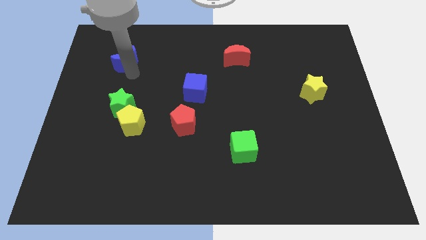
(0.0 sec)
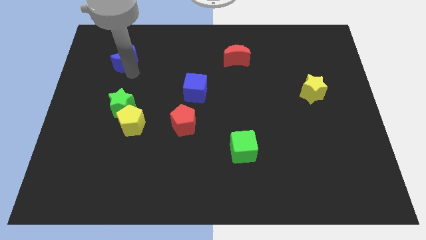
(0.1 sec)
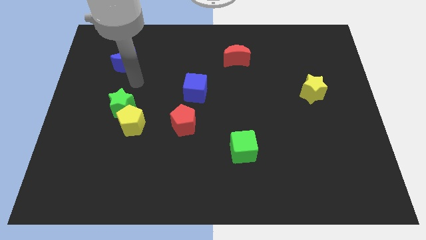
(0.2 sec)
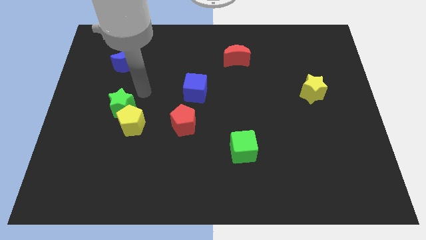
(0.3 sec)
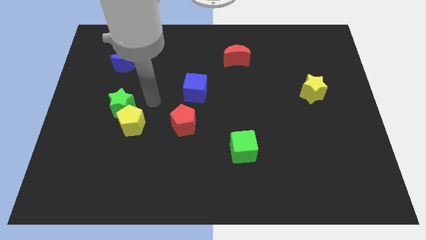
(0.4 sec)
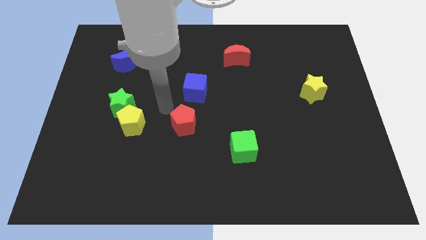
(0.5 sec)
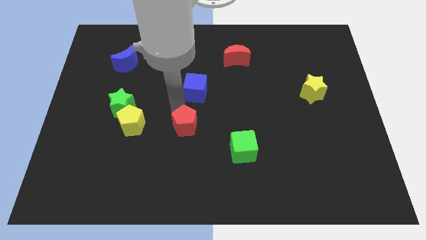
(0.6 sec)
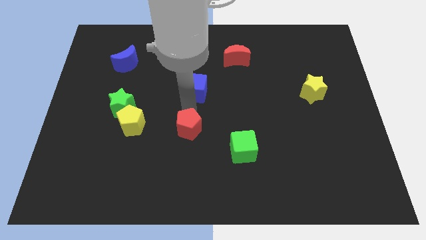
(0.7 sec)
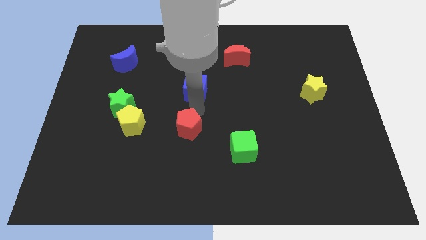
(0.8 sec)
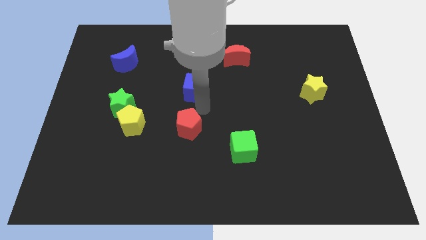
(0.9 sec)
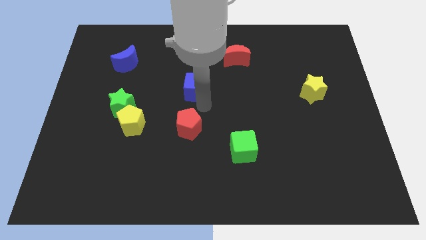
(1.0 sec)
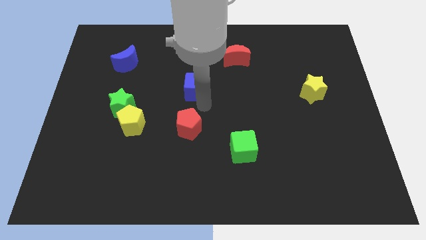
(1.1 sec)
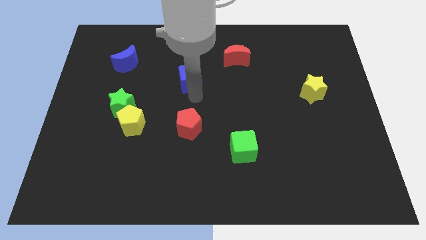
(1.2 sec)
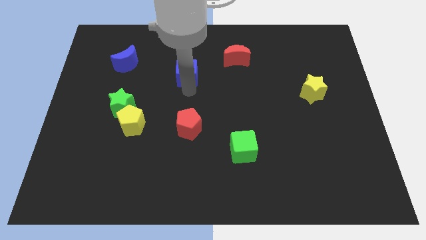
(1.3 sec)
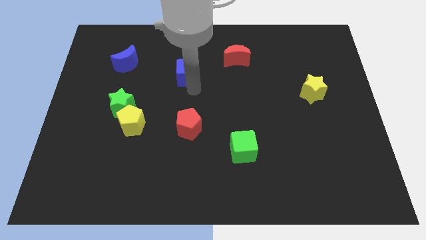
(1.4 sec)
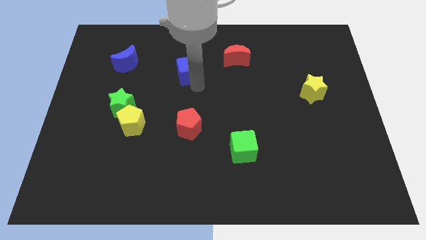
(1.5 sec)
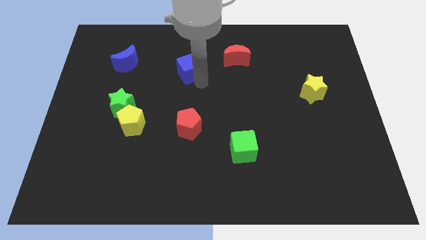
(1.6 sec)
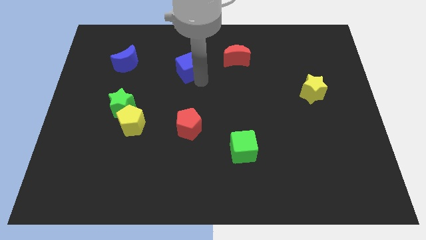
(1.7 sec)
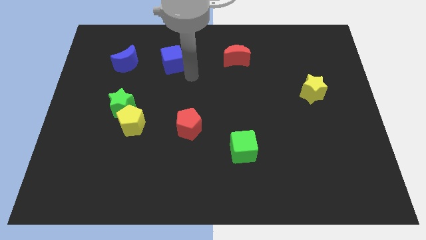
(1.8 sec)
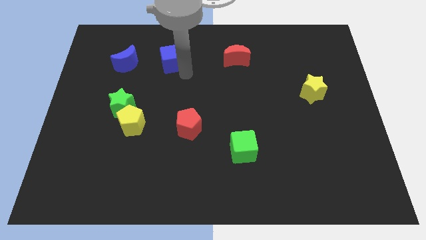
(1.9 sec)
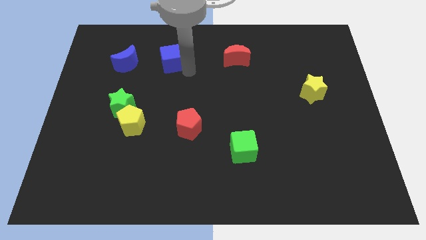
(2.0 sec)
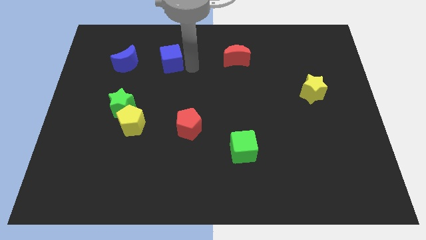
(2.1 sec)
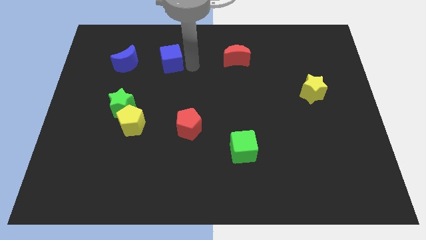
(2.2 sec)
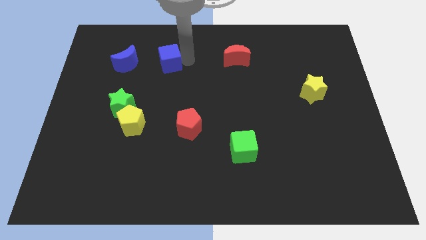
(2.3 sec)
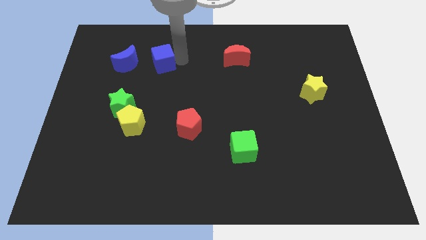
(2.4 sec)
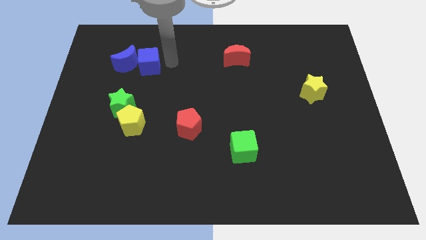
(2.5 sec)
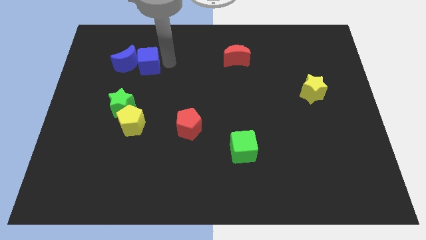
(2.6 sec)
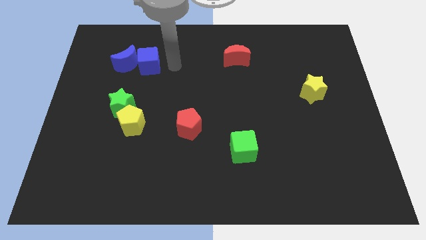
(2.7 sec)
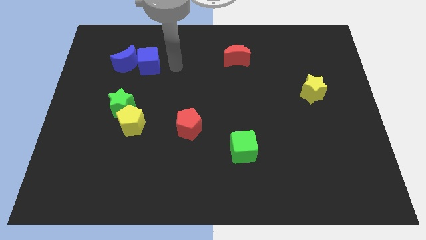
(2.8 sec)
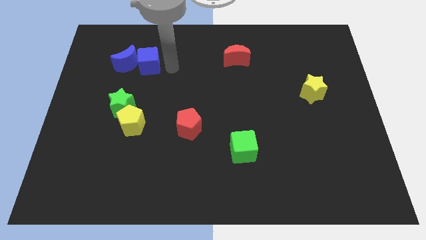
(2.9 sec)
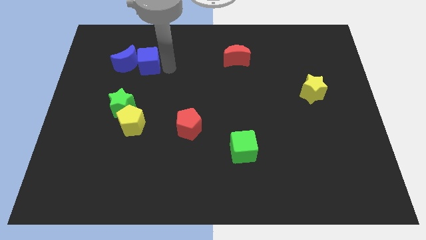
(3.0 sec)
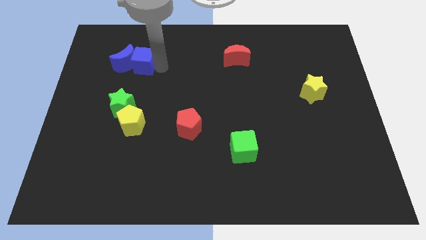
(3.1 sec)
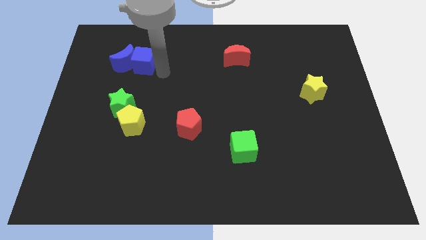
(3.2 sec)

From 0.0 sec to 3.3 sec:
move the blue cube to the right of the blue crescent

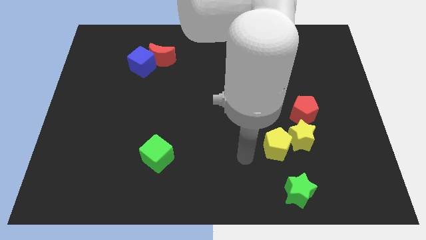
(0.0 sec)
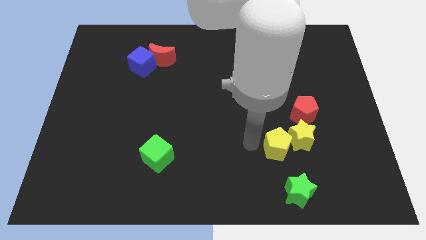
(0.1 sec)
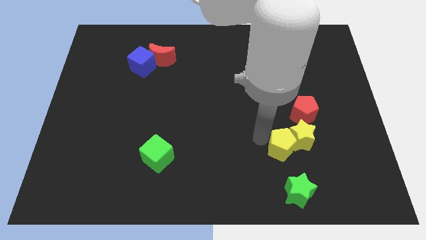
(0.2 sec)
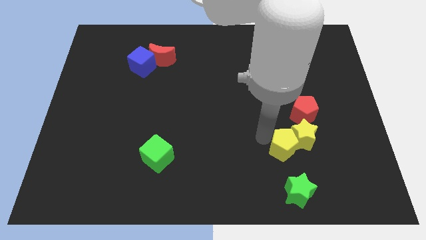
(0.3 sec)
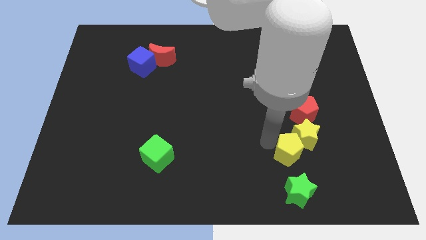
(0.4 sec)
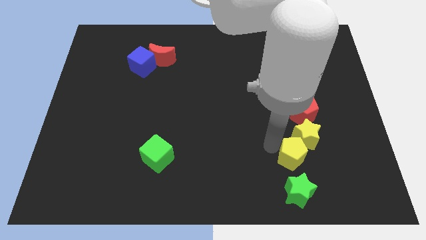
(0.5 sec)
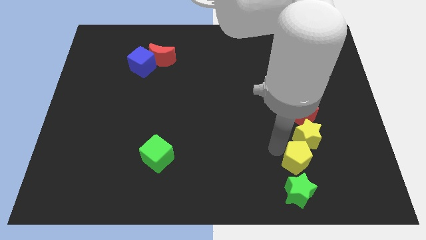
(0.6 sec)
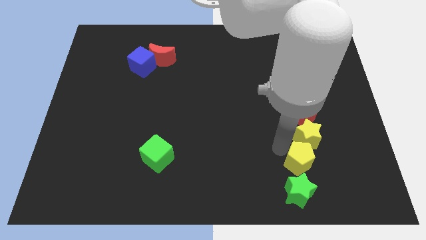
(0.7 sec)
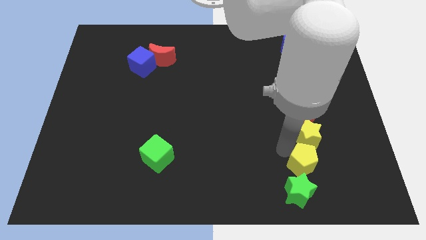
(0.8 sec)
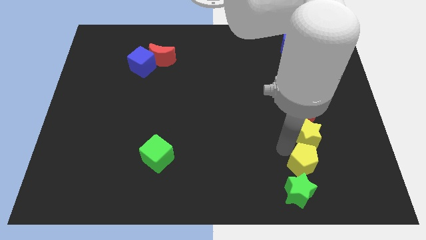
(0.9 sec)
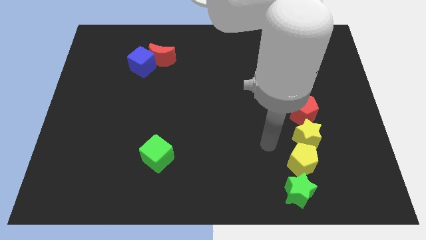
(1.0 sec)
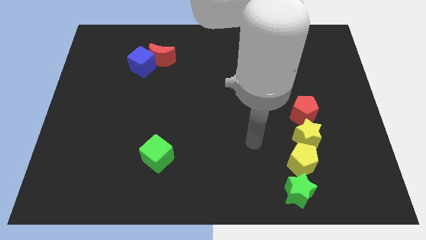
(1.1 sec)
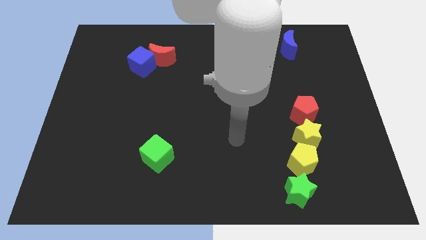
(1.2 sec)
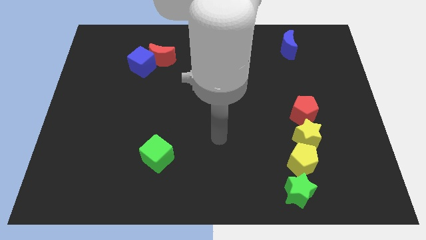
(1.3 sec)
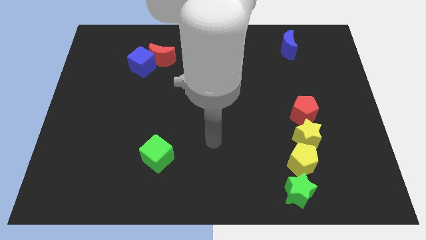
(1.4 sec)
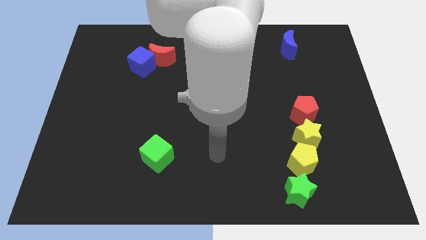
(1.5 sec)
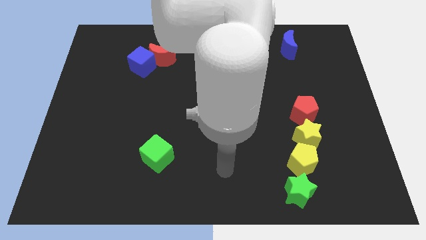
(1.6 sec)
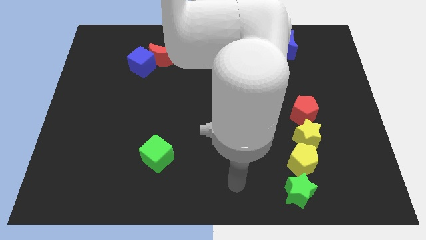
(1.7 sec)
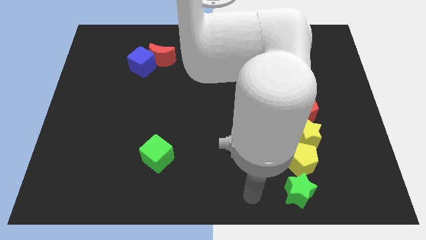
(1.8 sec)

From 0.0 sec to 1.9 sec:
place yellow pentagon in between the yellow star and green star

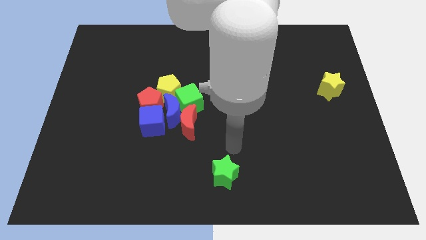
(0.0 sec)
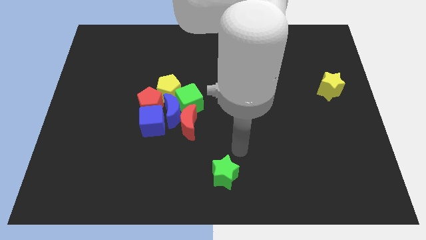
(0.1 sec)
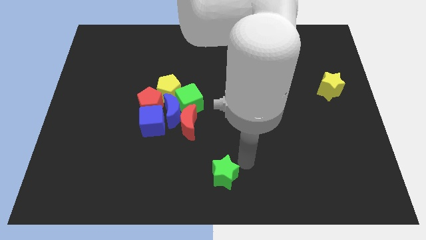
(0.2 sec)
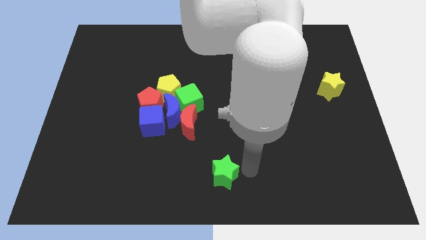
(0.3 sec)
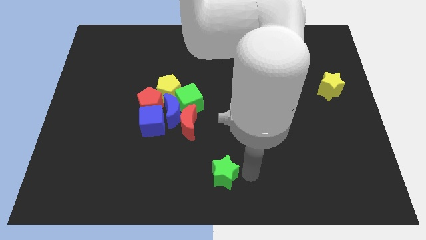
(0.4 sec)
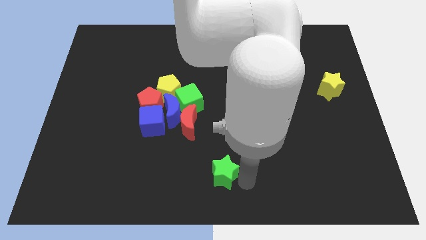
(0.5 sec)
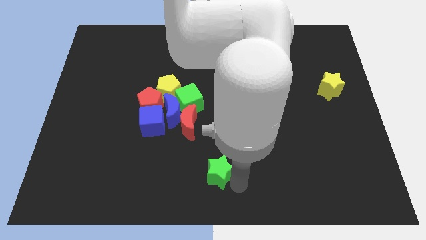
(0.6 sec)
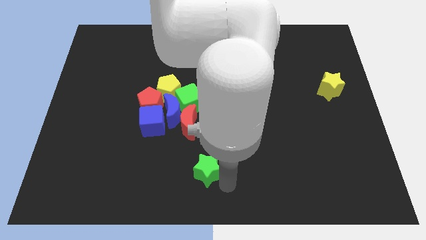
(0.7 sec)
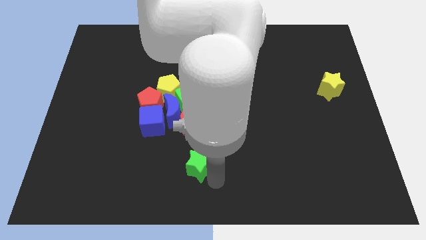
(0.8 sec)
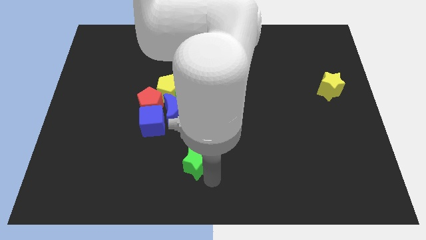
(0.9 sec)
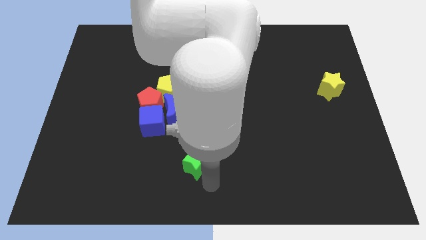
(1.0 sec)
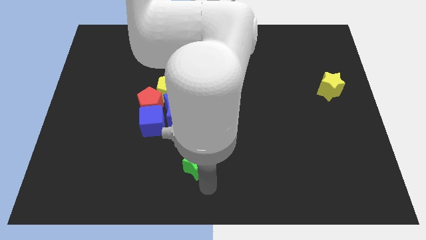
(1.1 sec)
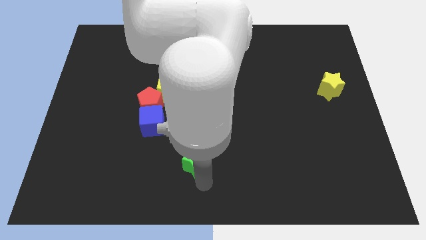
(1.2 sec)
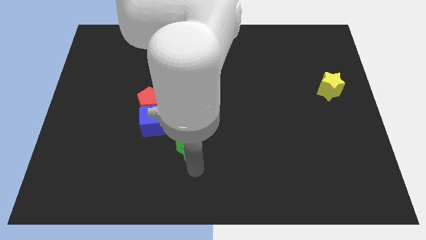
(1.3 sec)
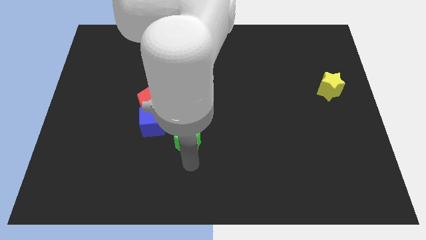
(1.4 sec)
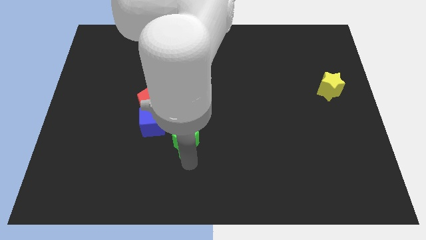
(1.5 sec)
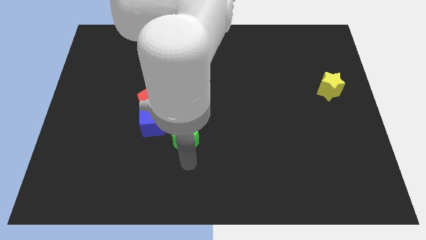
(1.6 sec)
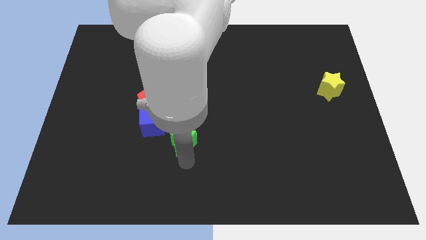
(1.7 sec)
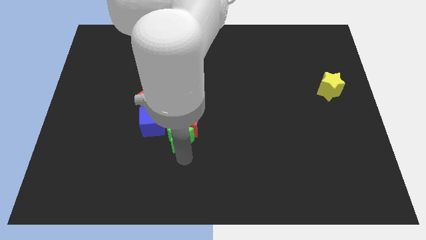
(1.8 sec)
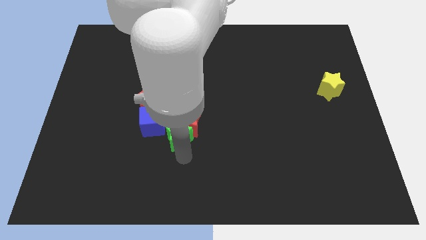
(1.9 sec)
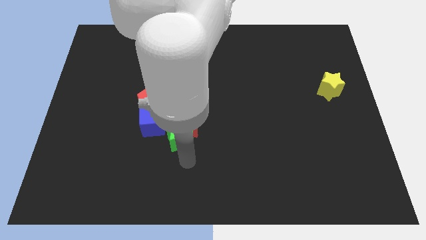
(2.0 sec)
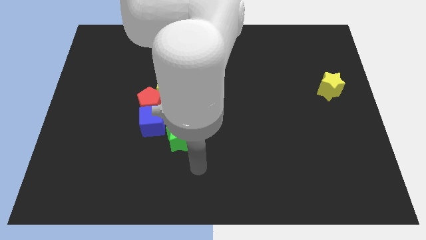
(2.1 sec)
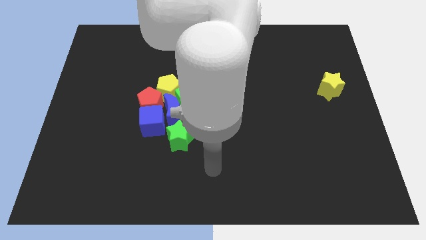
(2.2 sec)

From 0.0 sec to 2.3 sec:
move the green star to the bottom of the blue moon

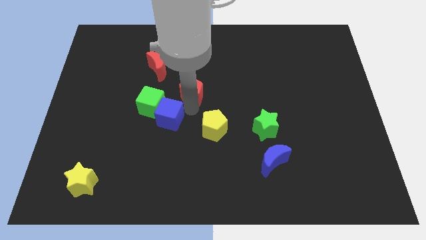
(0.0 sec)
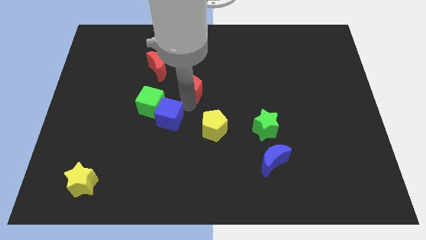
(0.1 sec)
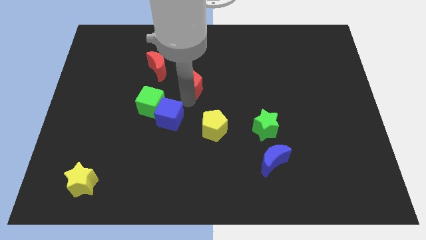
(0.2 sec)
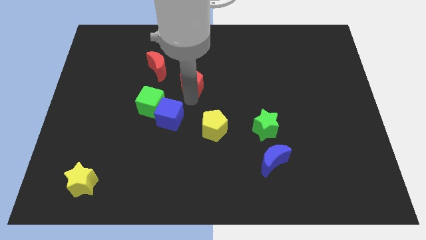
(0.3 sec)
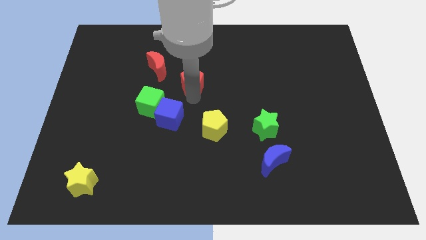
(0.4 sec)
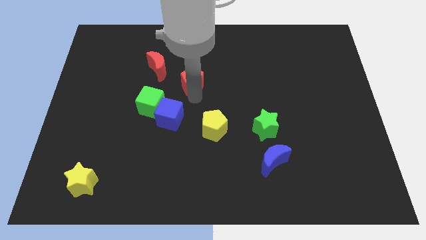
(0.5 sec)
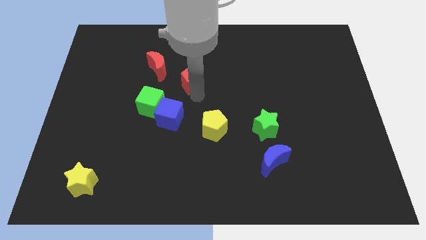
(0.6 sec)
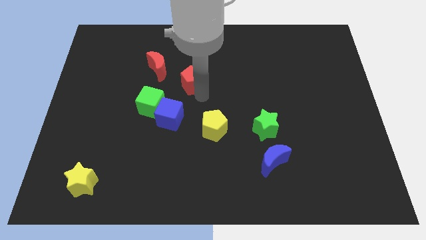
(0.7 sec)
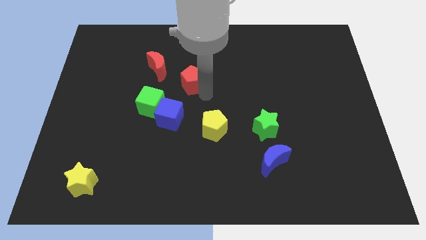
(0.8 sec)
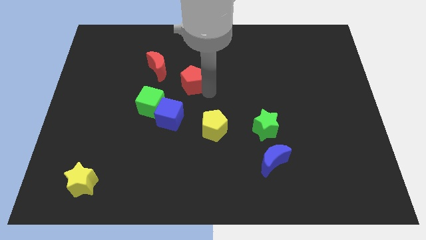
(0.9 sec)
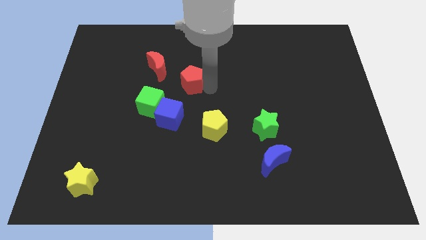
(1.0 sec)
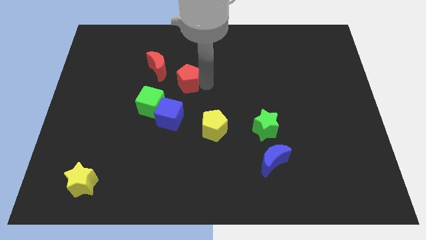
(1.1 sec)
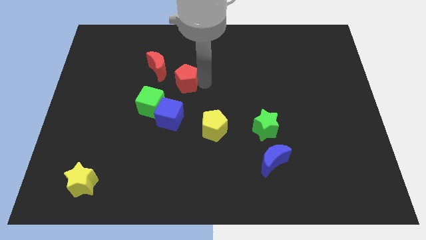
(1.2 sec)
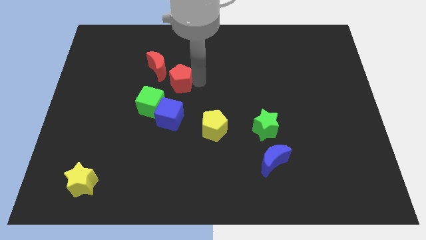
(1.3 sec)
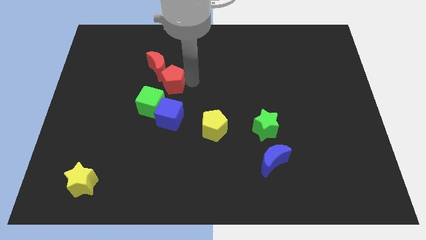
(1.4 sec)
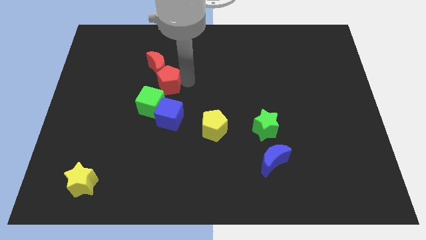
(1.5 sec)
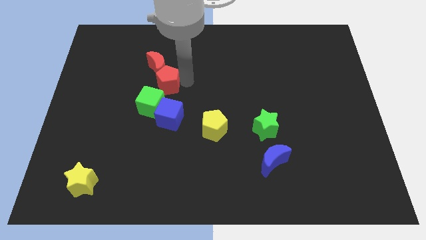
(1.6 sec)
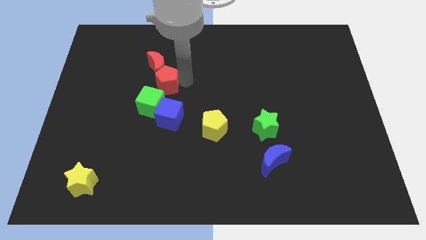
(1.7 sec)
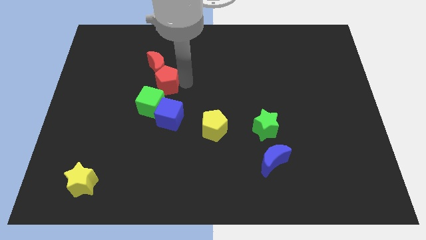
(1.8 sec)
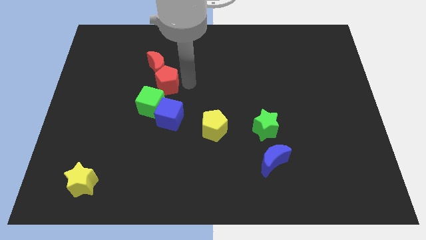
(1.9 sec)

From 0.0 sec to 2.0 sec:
move the red pentagon to the bottom of red crescent
